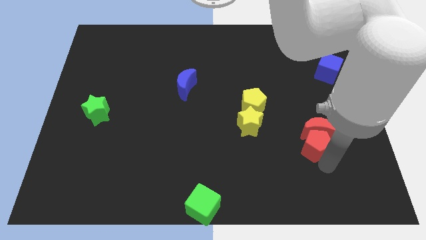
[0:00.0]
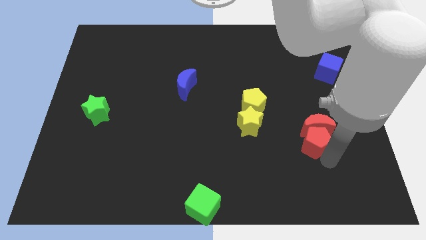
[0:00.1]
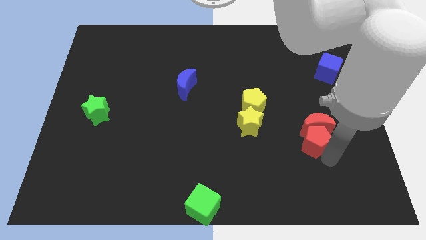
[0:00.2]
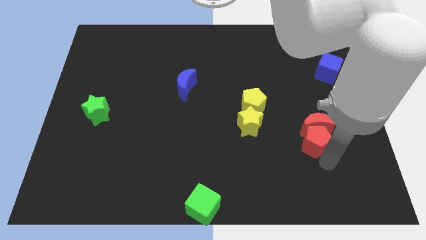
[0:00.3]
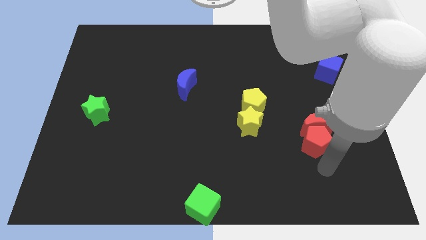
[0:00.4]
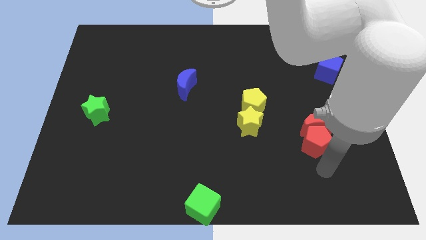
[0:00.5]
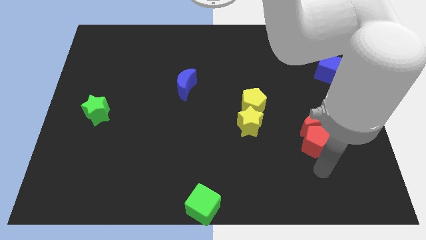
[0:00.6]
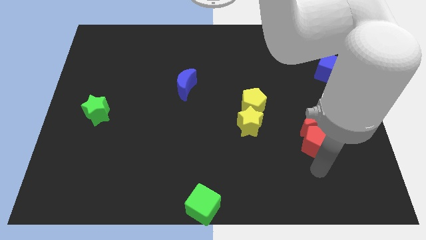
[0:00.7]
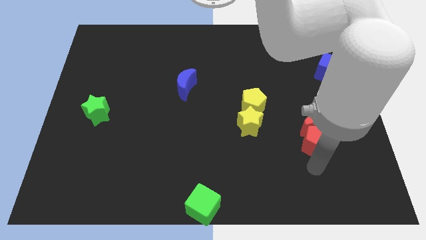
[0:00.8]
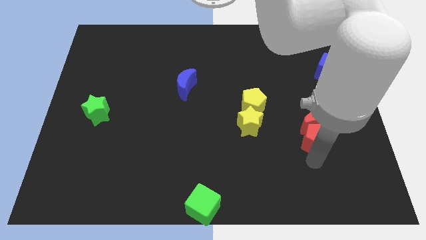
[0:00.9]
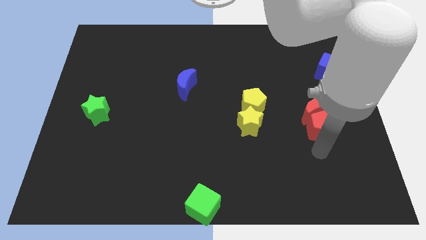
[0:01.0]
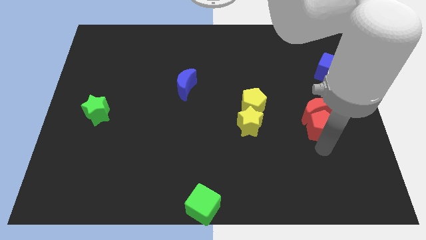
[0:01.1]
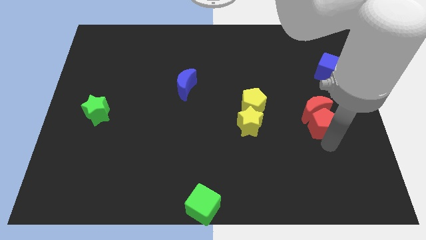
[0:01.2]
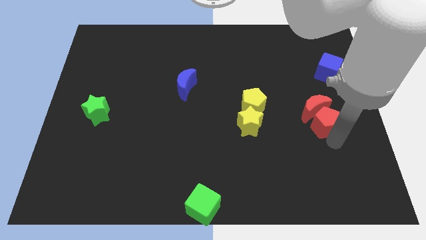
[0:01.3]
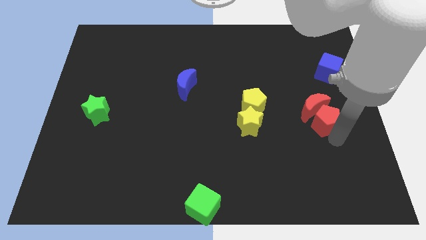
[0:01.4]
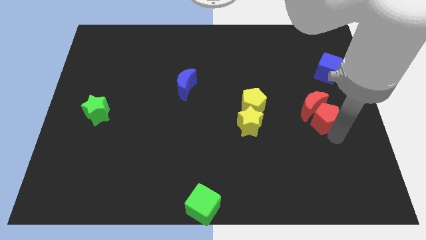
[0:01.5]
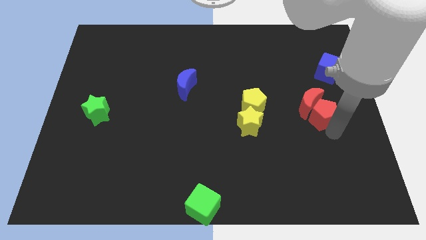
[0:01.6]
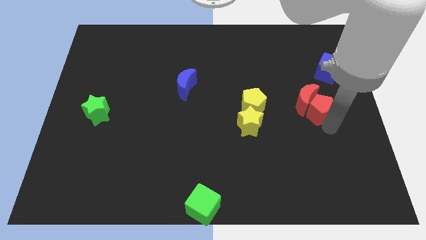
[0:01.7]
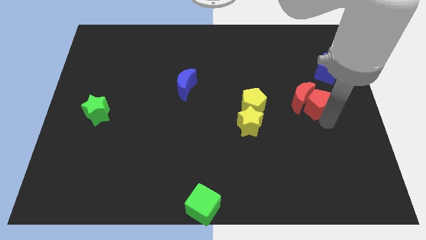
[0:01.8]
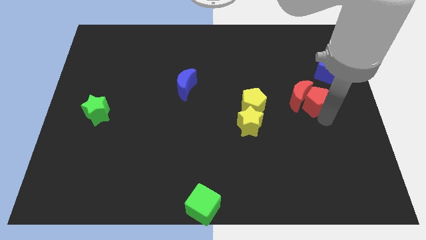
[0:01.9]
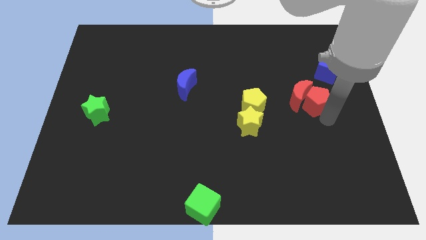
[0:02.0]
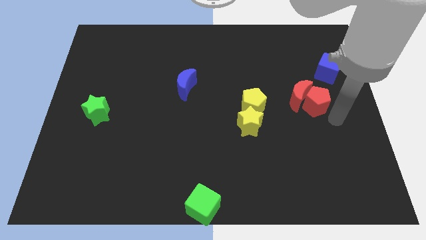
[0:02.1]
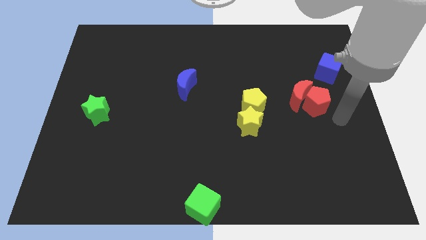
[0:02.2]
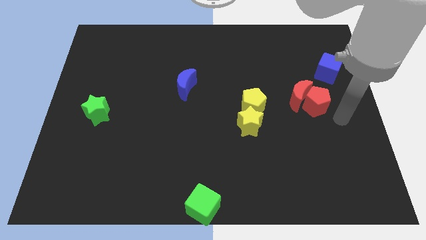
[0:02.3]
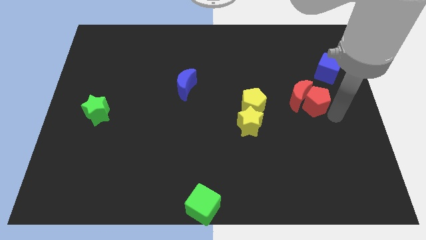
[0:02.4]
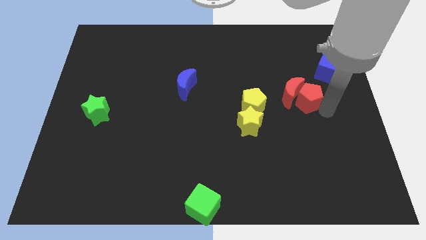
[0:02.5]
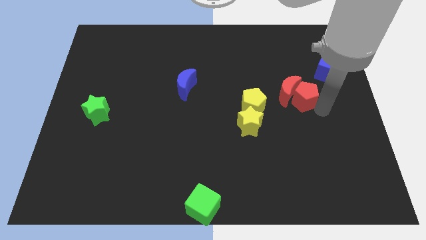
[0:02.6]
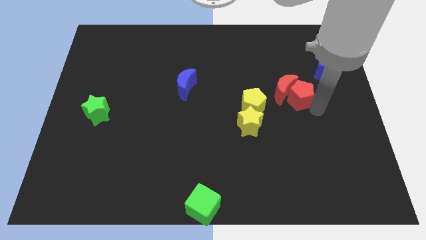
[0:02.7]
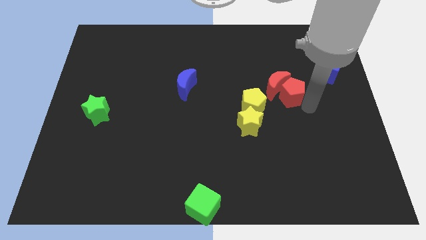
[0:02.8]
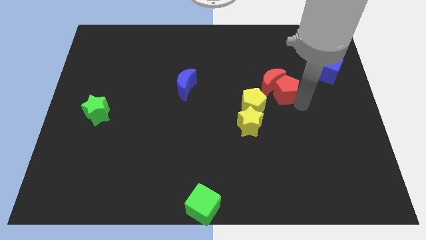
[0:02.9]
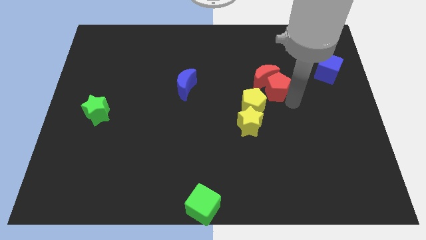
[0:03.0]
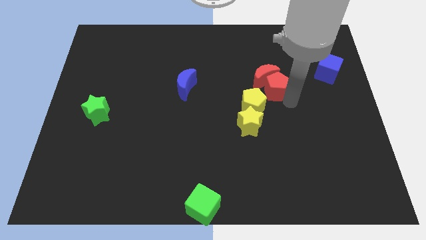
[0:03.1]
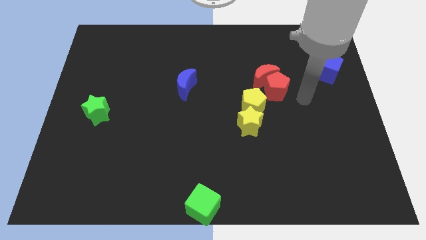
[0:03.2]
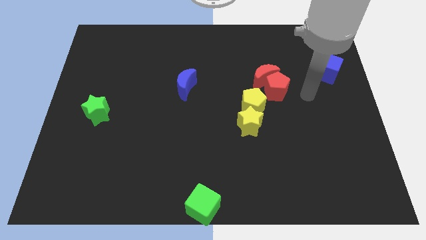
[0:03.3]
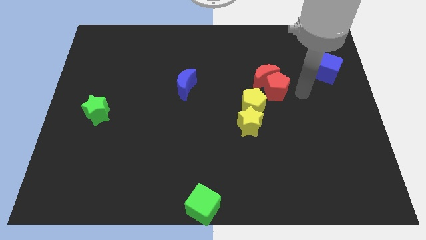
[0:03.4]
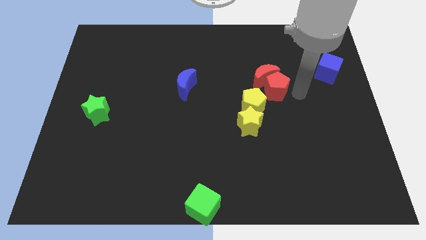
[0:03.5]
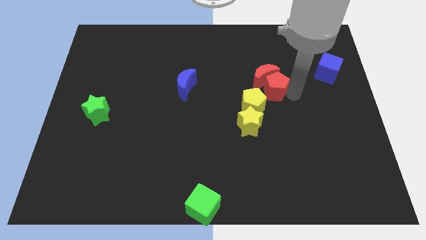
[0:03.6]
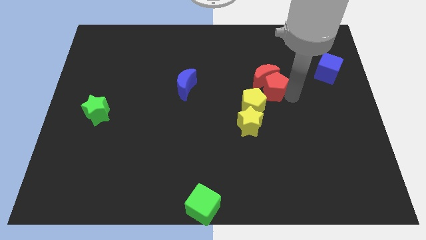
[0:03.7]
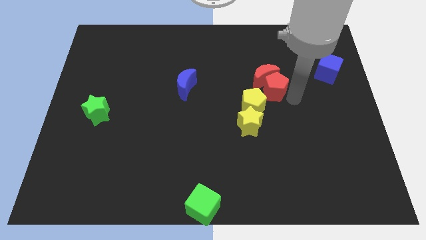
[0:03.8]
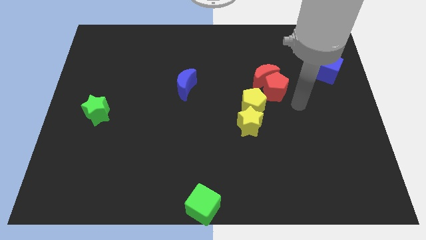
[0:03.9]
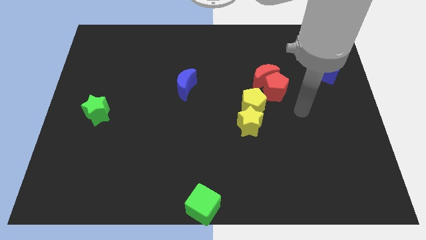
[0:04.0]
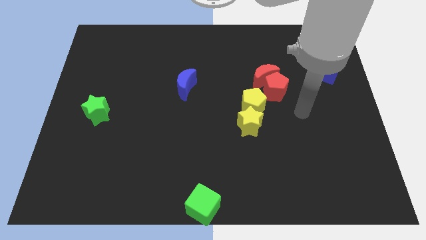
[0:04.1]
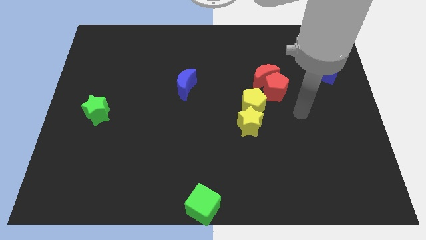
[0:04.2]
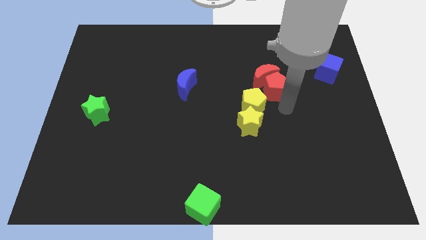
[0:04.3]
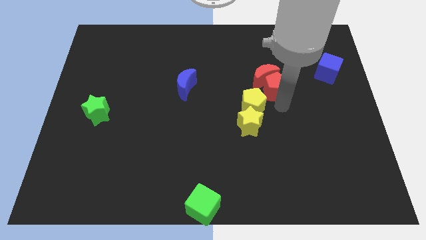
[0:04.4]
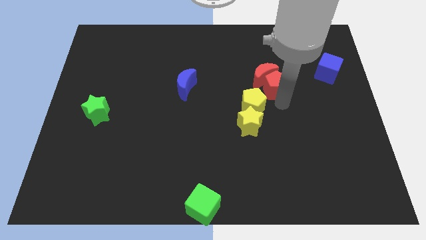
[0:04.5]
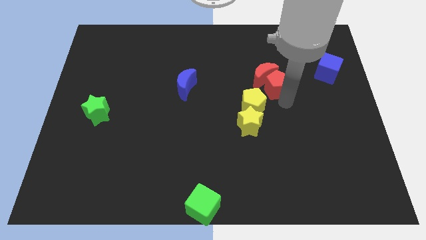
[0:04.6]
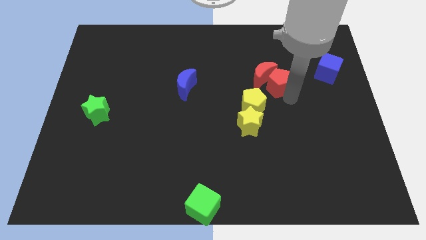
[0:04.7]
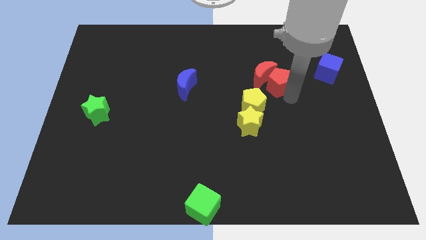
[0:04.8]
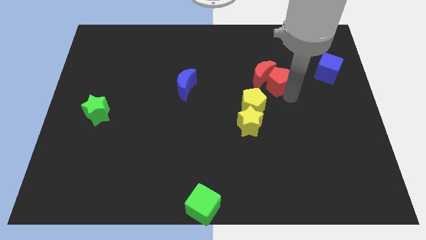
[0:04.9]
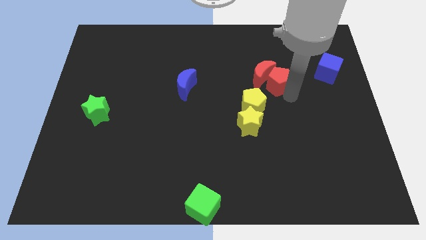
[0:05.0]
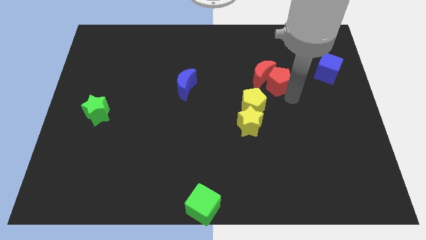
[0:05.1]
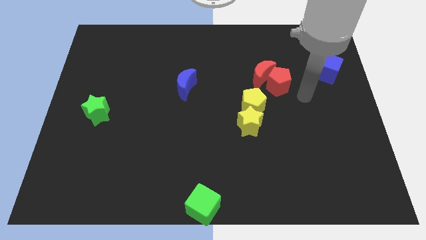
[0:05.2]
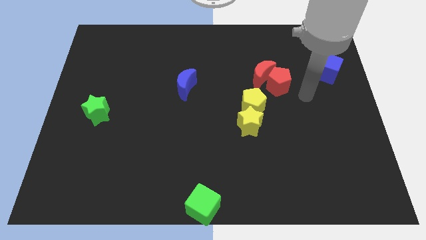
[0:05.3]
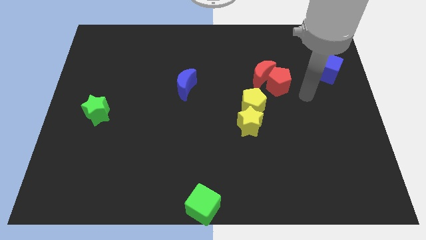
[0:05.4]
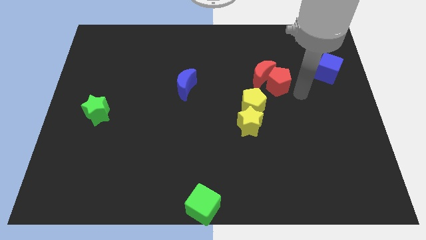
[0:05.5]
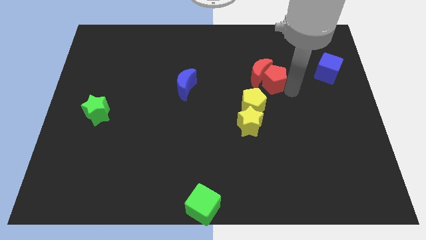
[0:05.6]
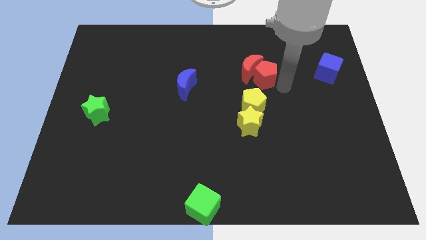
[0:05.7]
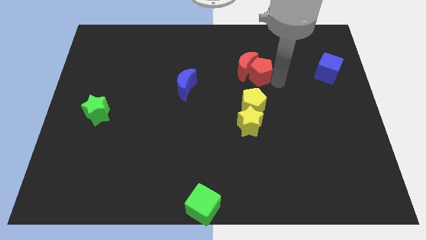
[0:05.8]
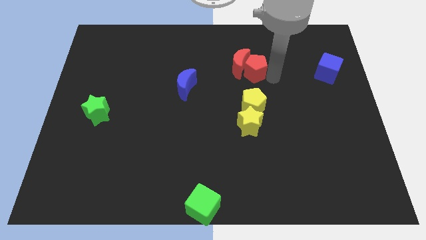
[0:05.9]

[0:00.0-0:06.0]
move the red blocks on top of yellow blocks

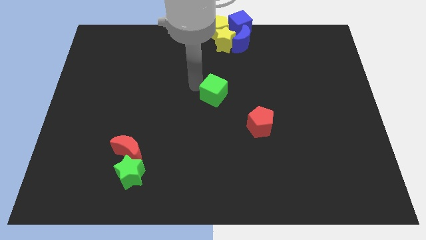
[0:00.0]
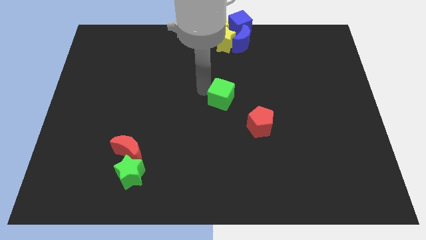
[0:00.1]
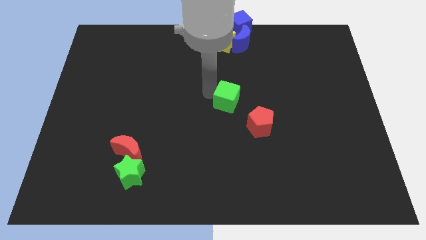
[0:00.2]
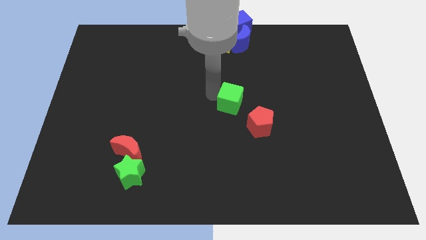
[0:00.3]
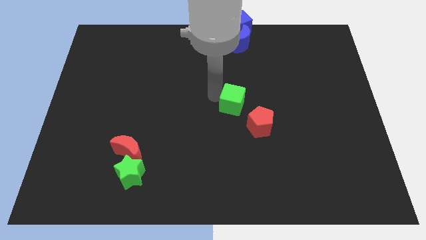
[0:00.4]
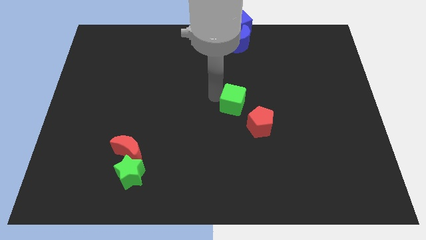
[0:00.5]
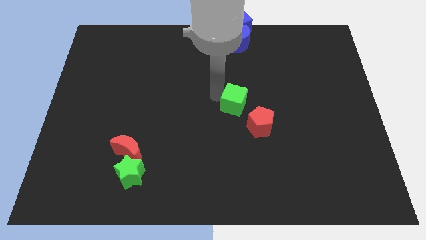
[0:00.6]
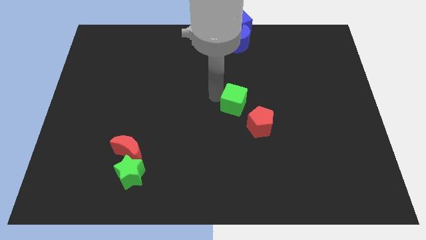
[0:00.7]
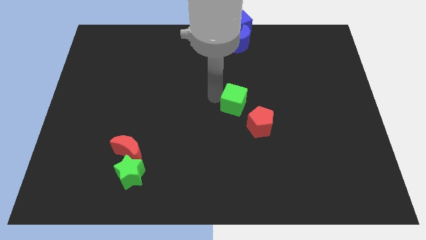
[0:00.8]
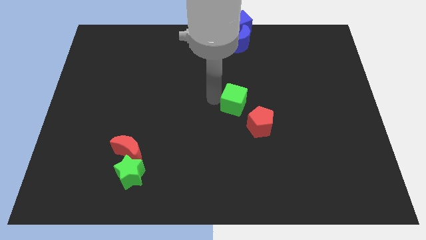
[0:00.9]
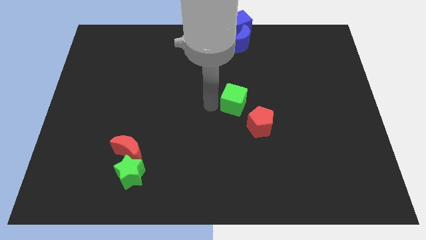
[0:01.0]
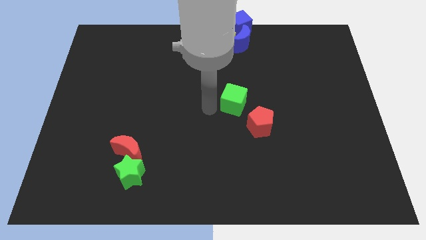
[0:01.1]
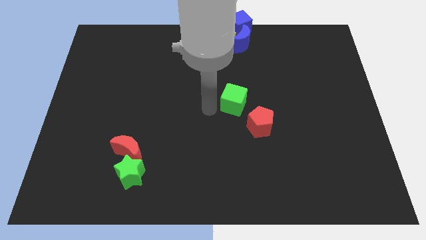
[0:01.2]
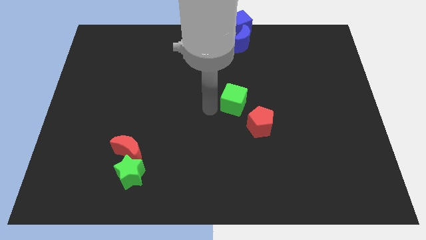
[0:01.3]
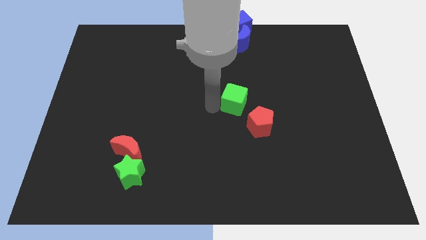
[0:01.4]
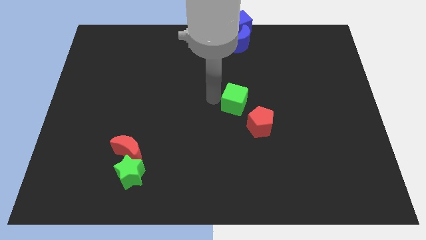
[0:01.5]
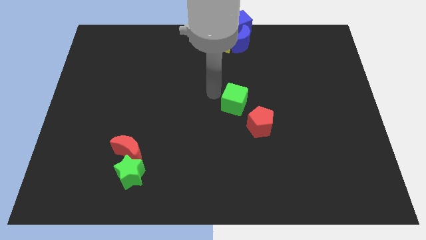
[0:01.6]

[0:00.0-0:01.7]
push the green cube towards the red pentagon

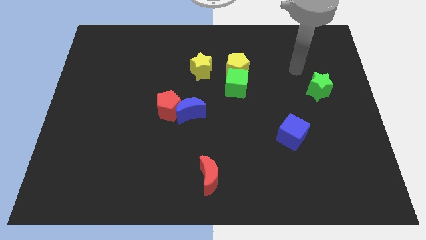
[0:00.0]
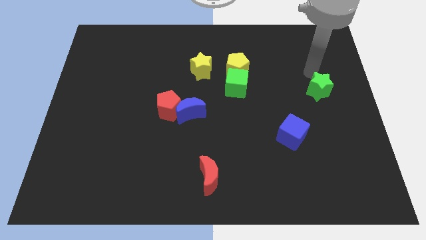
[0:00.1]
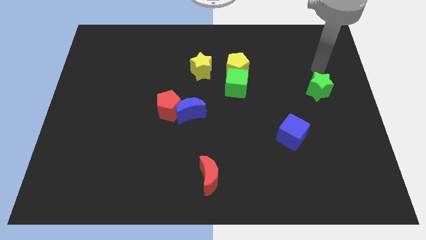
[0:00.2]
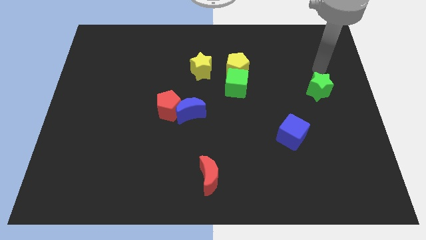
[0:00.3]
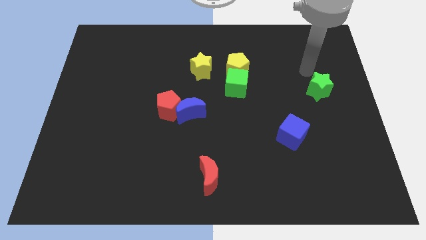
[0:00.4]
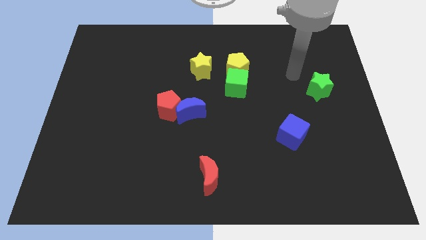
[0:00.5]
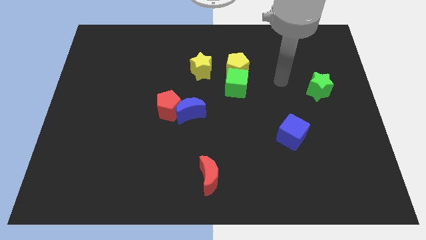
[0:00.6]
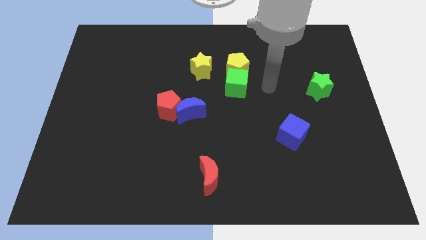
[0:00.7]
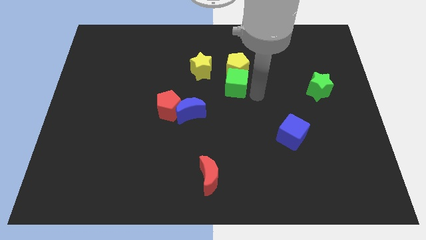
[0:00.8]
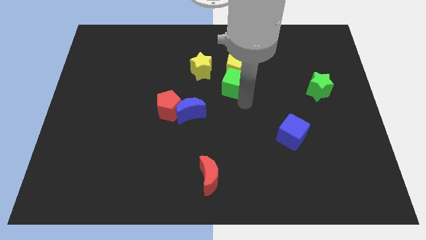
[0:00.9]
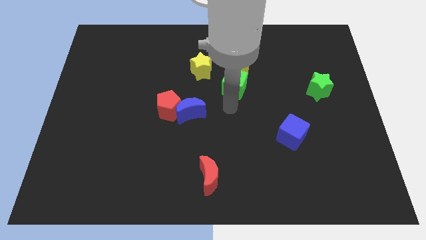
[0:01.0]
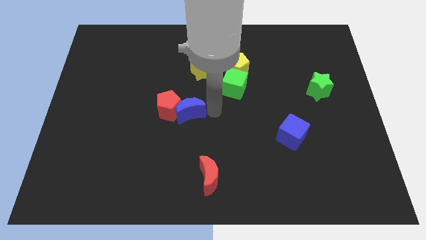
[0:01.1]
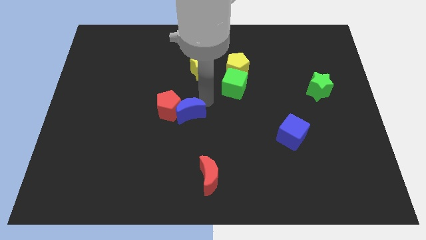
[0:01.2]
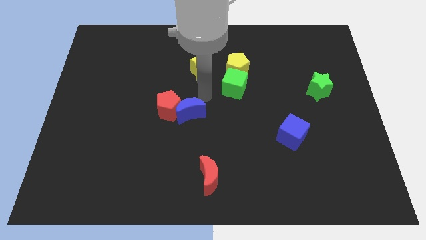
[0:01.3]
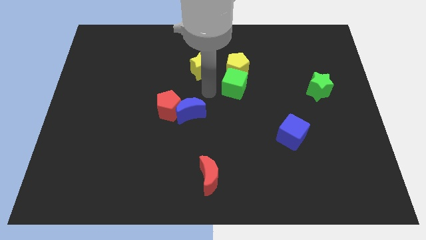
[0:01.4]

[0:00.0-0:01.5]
place your arm to the top of blue moon
